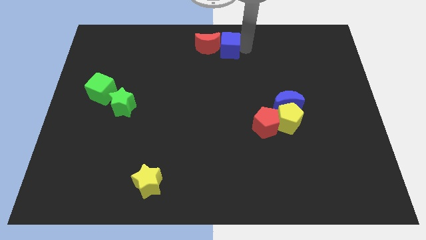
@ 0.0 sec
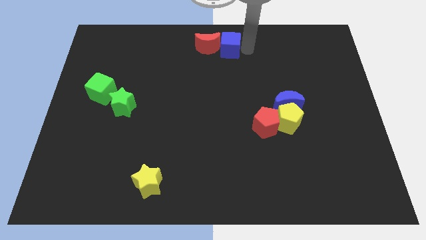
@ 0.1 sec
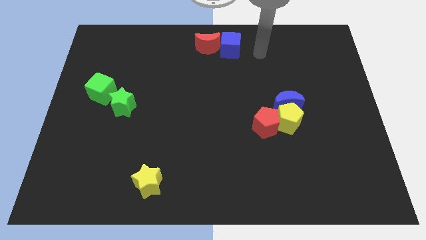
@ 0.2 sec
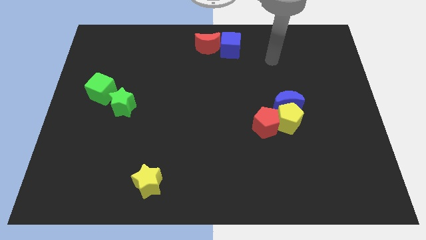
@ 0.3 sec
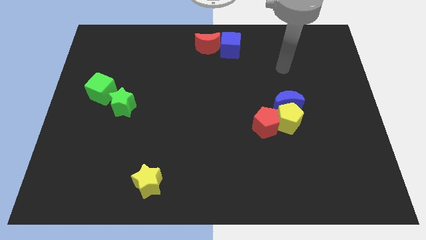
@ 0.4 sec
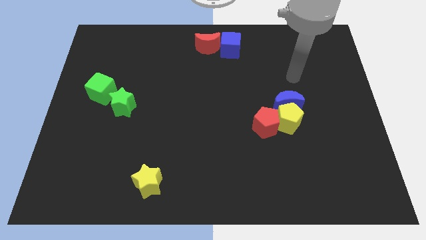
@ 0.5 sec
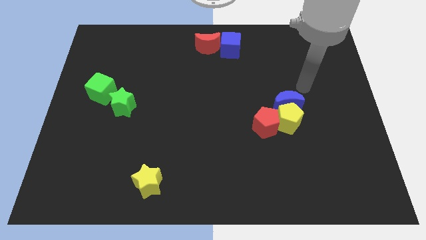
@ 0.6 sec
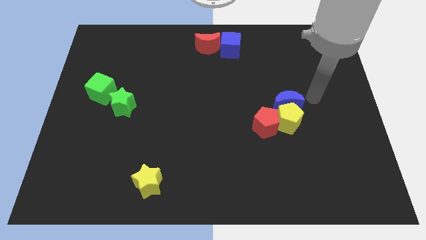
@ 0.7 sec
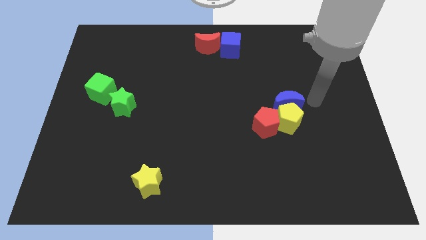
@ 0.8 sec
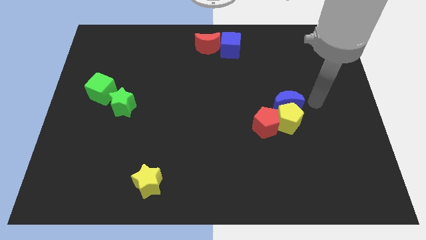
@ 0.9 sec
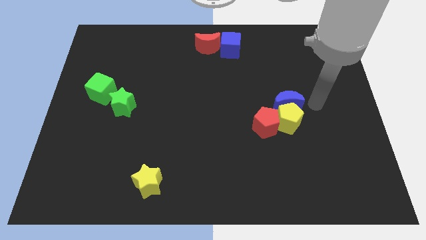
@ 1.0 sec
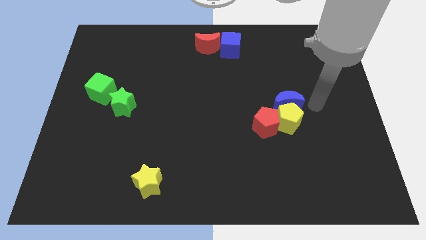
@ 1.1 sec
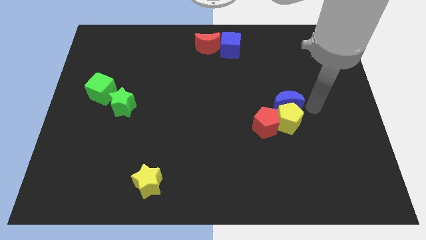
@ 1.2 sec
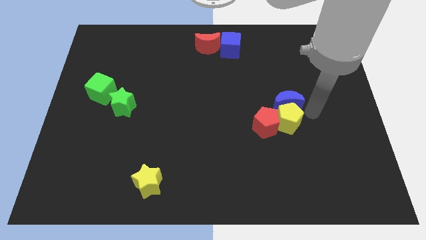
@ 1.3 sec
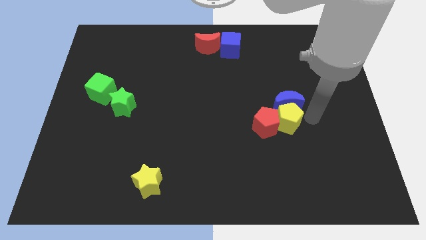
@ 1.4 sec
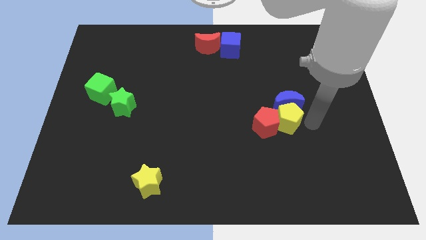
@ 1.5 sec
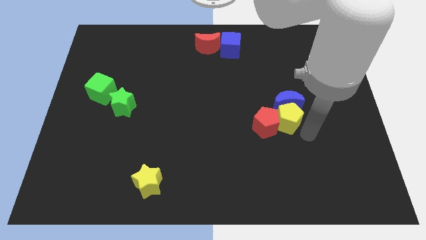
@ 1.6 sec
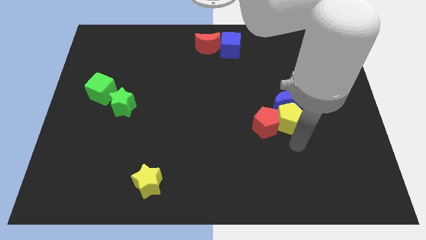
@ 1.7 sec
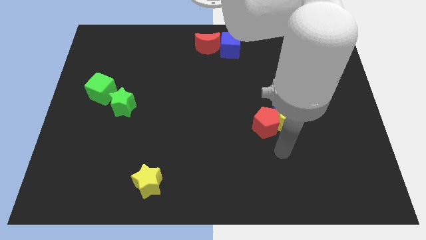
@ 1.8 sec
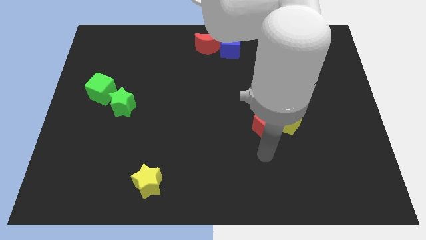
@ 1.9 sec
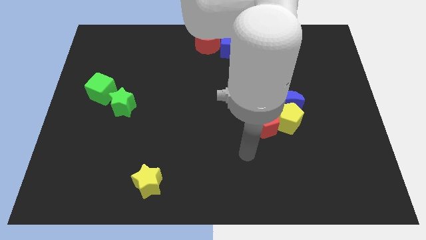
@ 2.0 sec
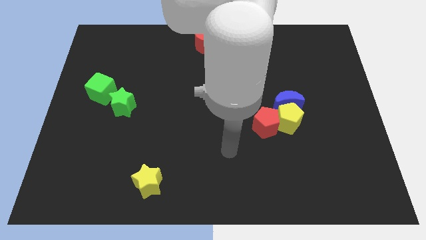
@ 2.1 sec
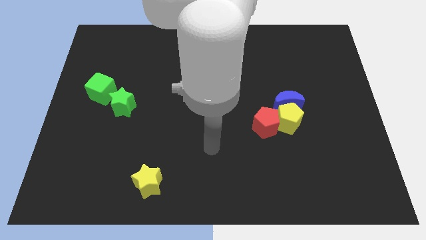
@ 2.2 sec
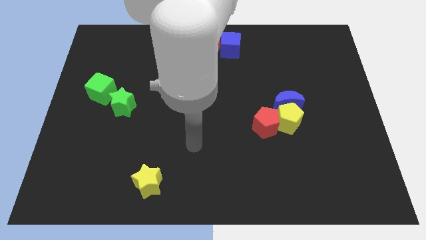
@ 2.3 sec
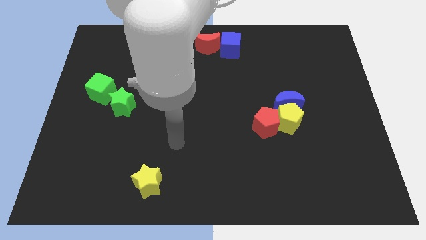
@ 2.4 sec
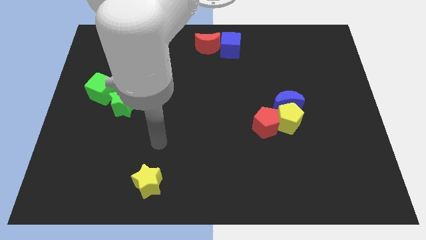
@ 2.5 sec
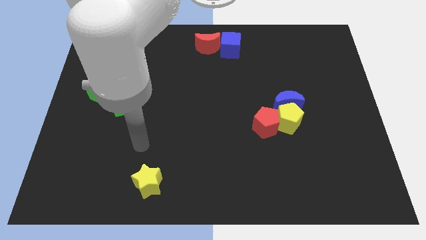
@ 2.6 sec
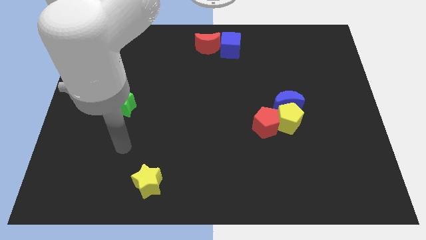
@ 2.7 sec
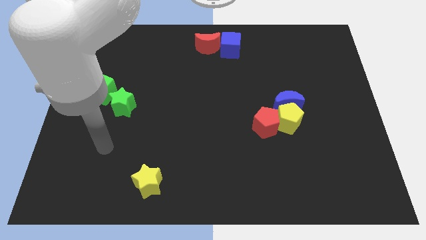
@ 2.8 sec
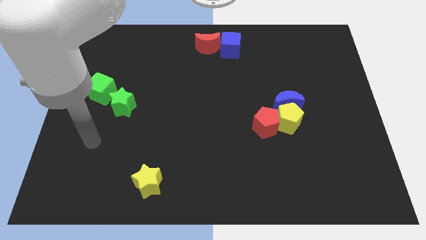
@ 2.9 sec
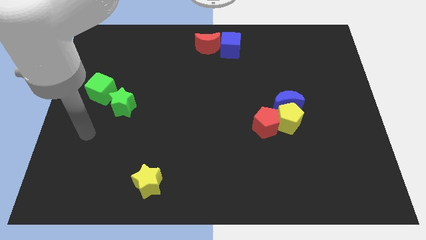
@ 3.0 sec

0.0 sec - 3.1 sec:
slide your arm around the blocks

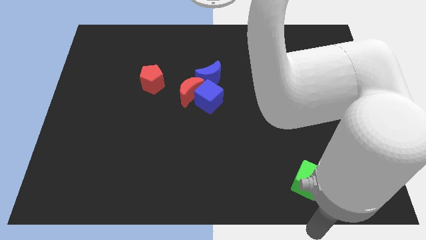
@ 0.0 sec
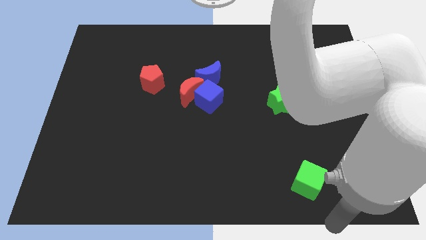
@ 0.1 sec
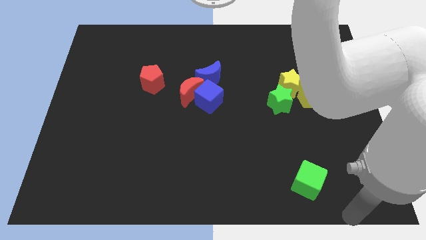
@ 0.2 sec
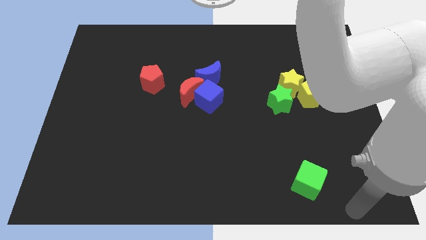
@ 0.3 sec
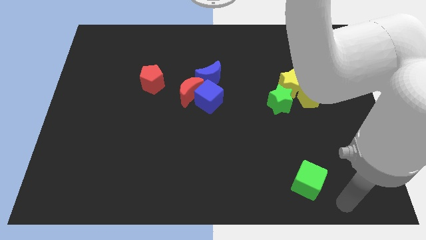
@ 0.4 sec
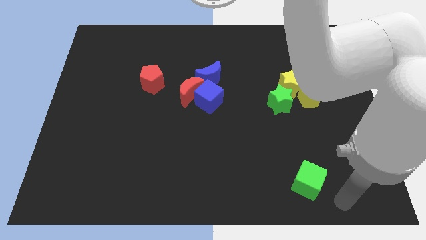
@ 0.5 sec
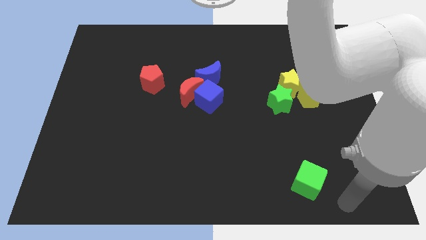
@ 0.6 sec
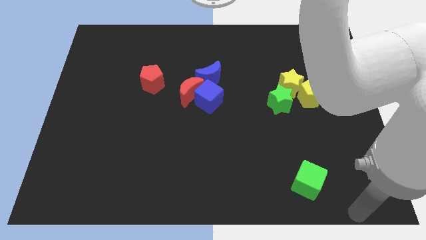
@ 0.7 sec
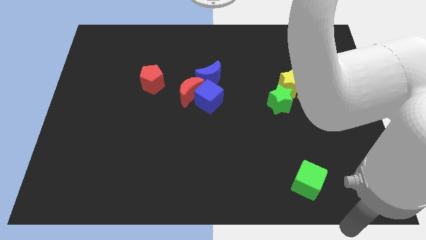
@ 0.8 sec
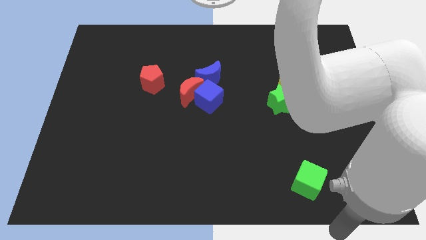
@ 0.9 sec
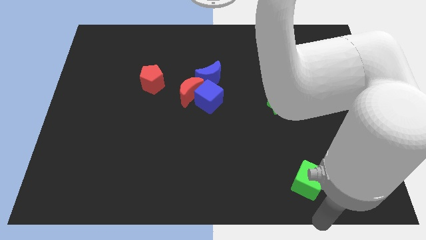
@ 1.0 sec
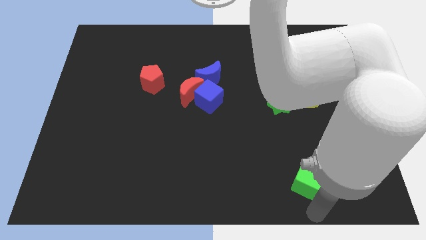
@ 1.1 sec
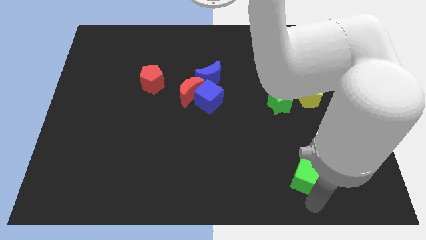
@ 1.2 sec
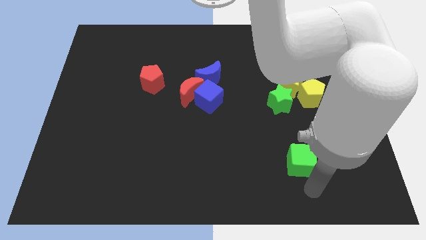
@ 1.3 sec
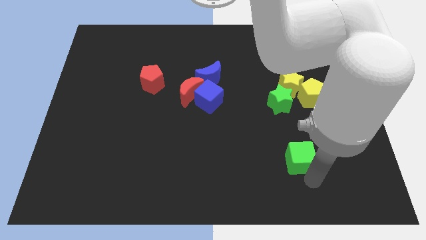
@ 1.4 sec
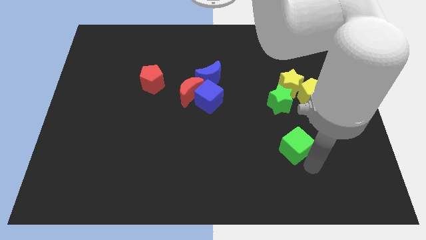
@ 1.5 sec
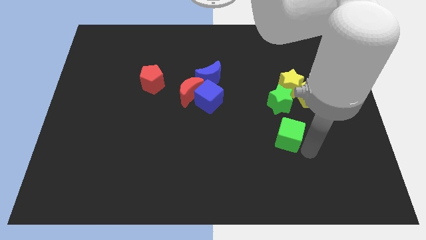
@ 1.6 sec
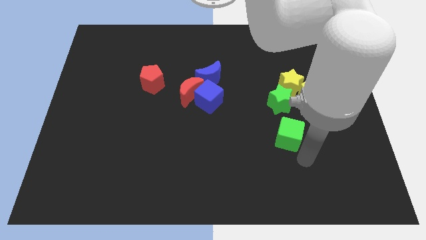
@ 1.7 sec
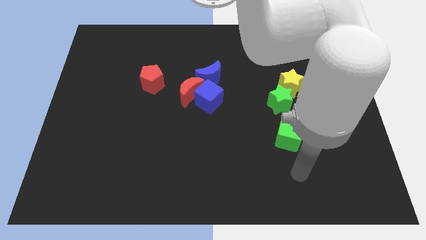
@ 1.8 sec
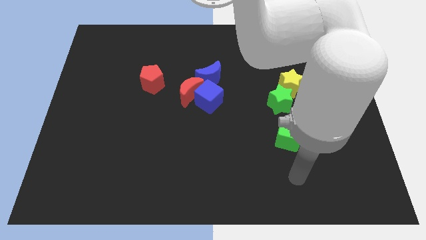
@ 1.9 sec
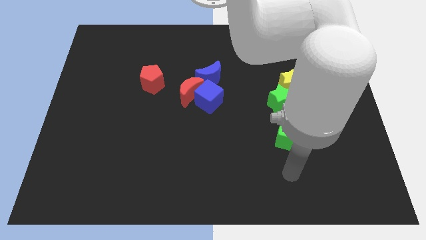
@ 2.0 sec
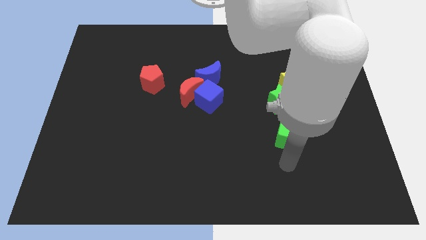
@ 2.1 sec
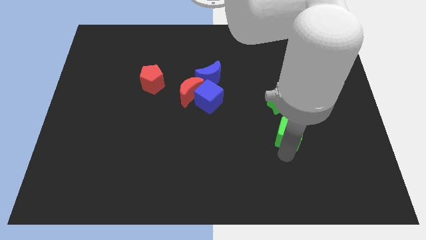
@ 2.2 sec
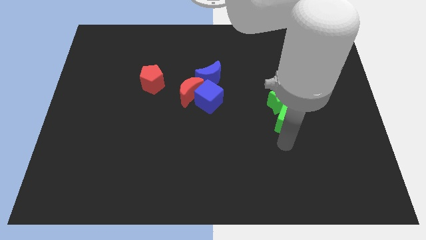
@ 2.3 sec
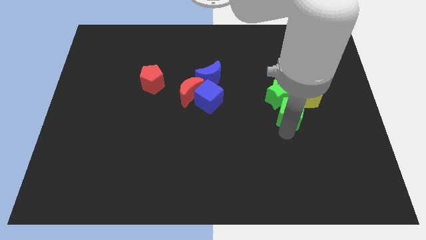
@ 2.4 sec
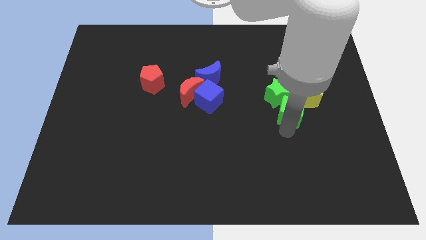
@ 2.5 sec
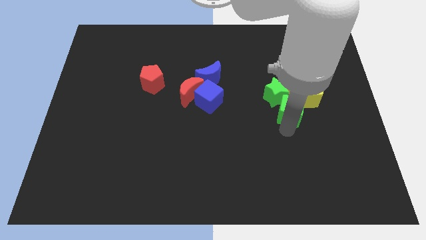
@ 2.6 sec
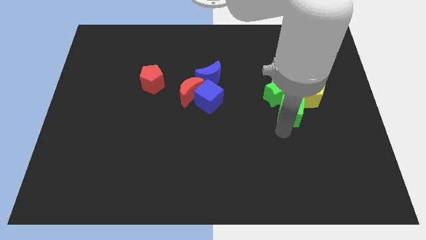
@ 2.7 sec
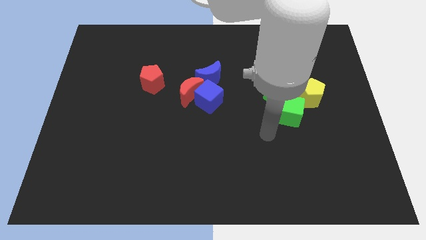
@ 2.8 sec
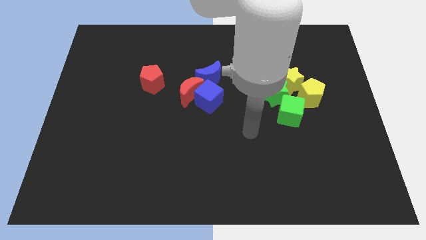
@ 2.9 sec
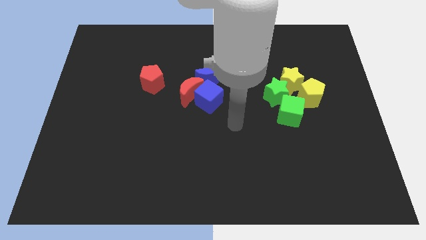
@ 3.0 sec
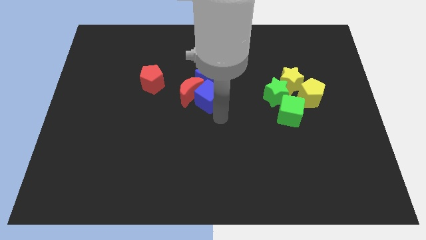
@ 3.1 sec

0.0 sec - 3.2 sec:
place the green cube to bottom of the green star

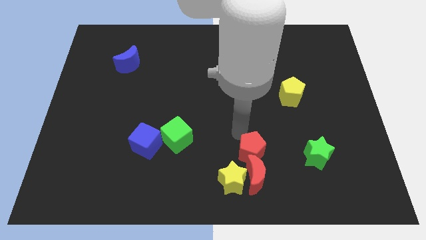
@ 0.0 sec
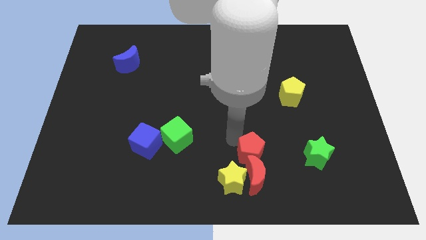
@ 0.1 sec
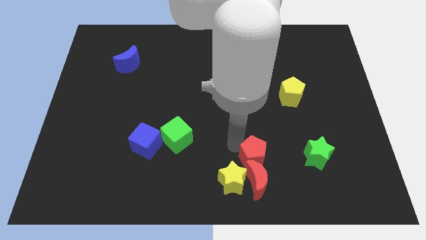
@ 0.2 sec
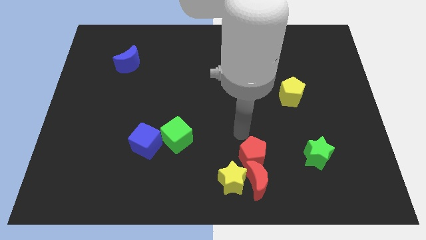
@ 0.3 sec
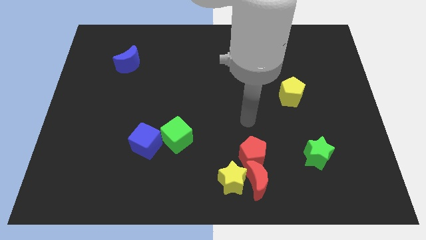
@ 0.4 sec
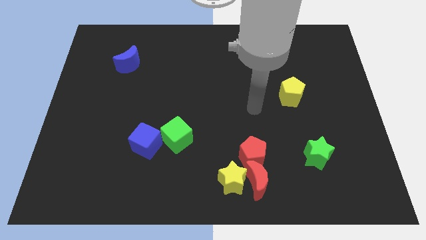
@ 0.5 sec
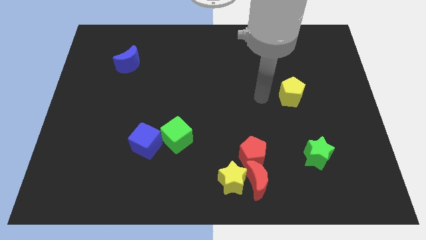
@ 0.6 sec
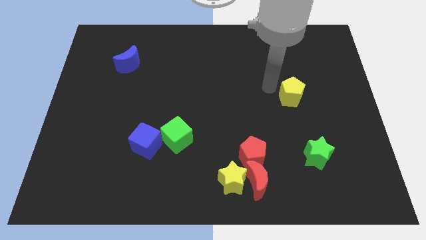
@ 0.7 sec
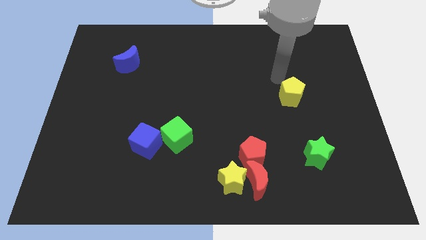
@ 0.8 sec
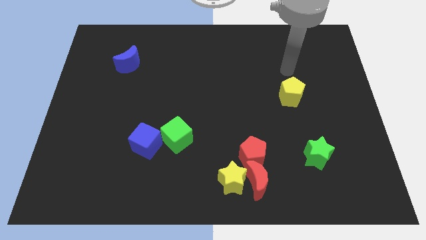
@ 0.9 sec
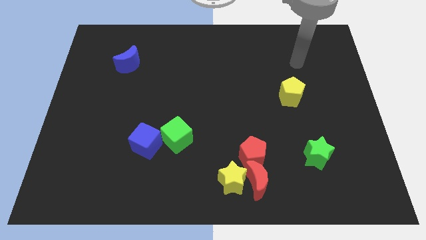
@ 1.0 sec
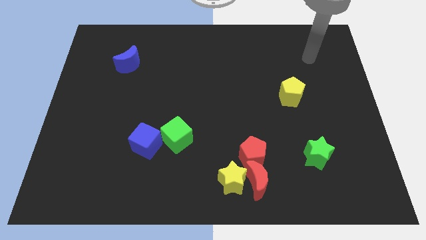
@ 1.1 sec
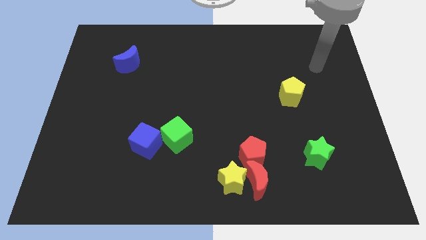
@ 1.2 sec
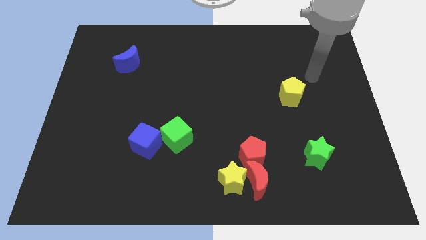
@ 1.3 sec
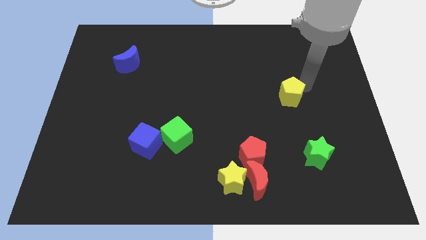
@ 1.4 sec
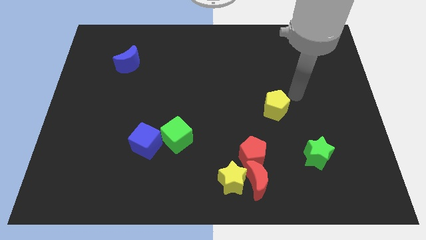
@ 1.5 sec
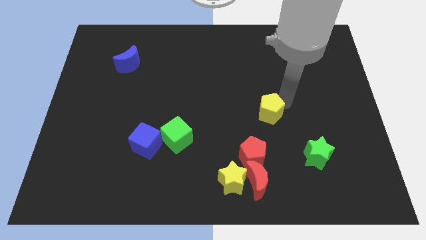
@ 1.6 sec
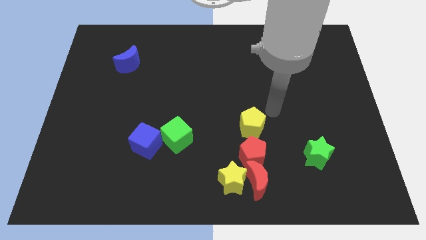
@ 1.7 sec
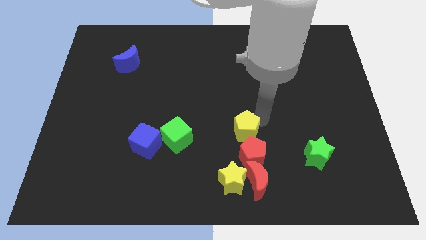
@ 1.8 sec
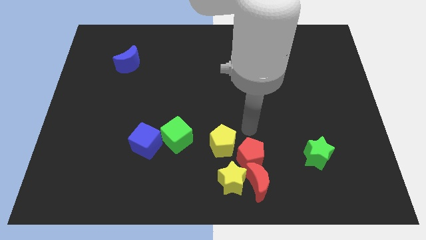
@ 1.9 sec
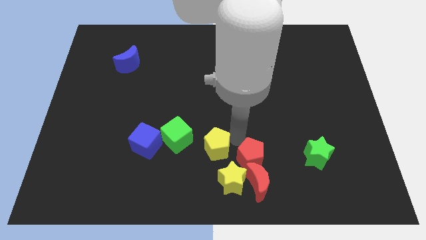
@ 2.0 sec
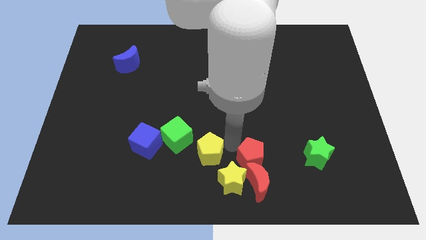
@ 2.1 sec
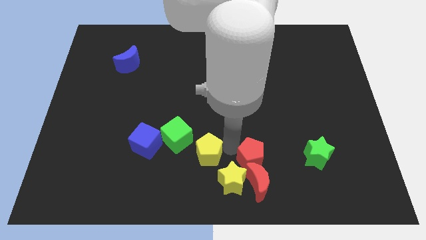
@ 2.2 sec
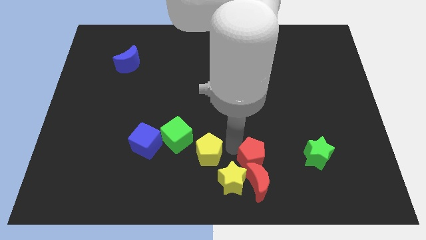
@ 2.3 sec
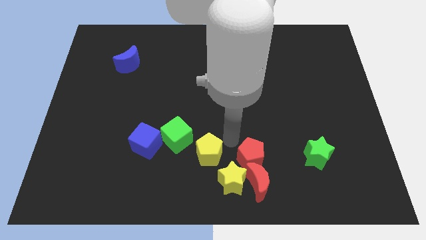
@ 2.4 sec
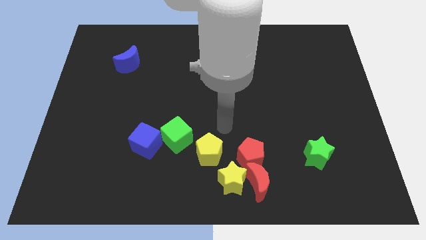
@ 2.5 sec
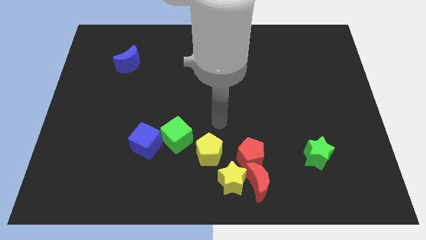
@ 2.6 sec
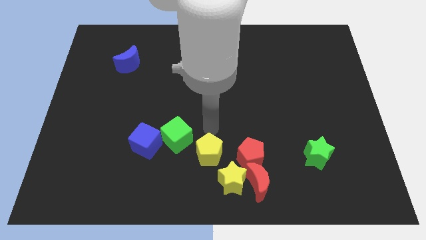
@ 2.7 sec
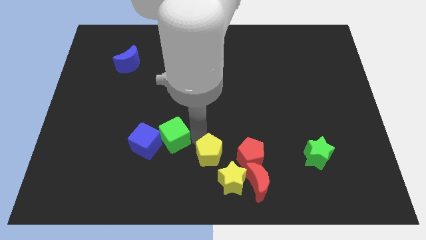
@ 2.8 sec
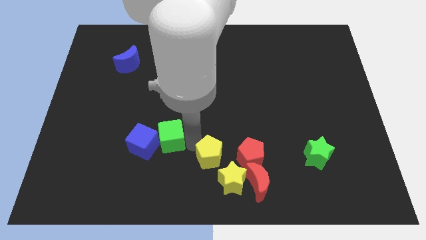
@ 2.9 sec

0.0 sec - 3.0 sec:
place yellow pentagon to the left of red pentagon
